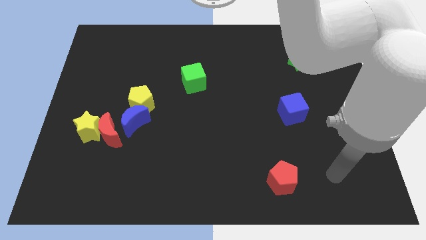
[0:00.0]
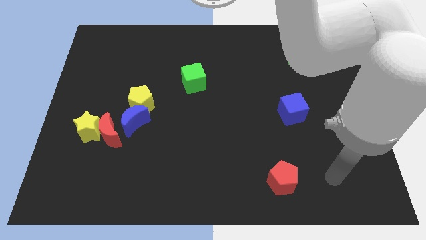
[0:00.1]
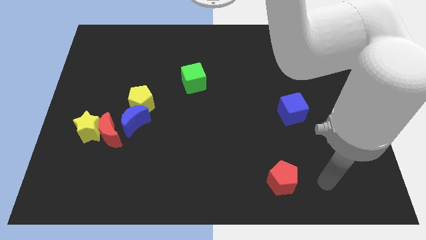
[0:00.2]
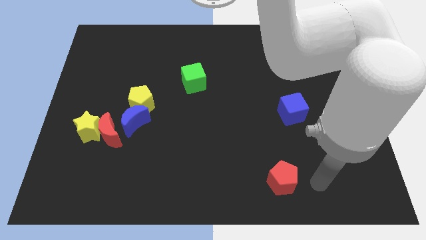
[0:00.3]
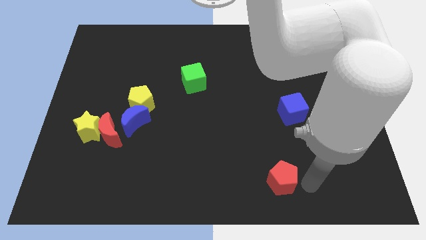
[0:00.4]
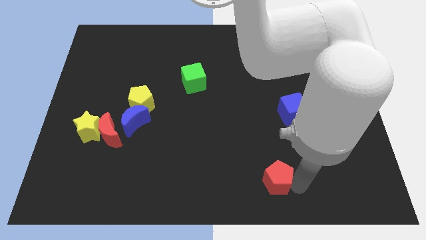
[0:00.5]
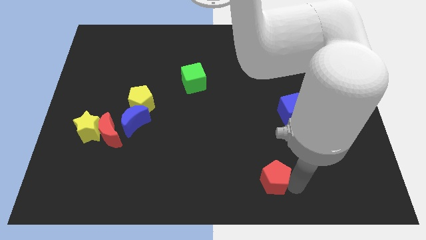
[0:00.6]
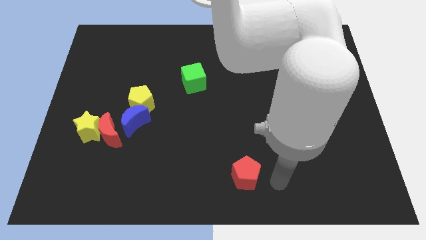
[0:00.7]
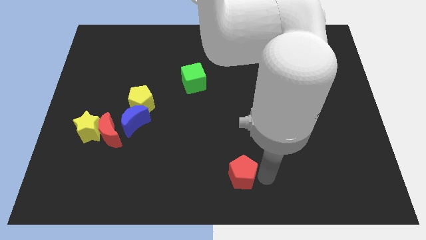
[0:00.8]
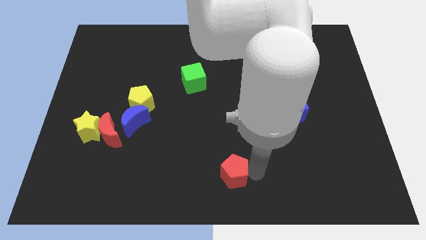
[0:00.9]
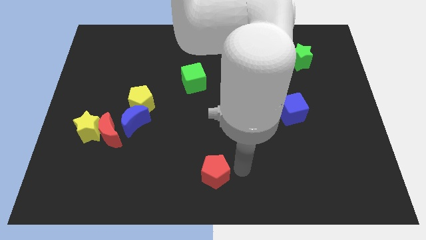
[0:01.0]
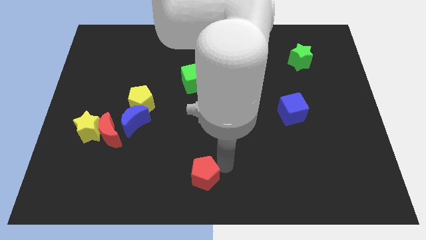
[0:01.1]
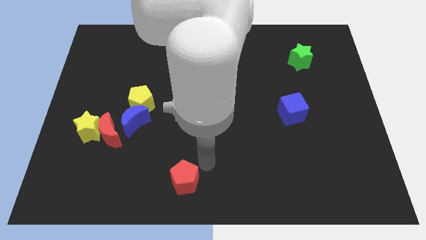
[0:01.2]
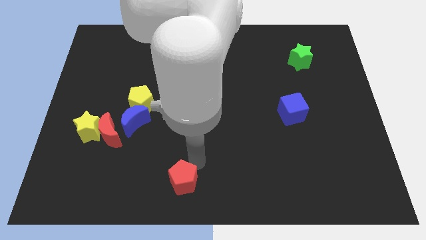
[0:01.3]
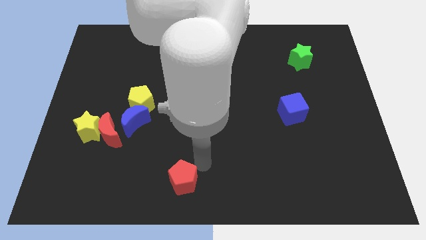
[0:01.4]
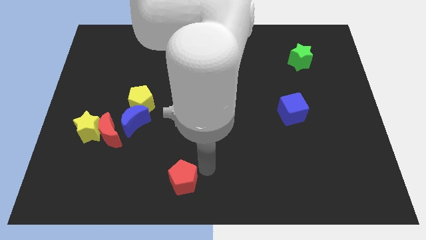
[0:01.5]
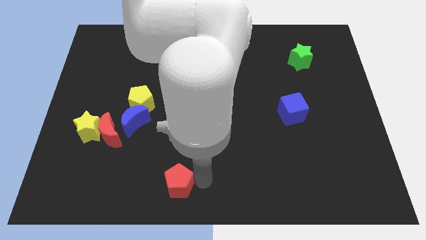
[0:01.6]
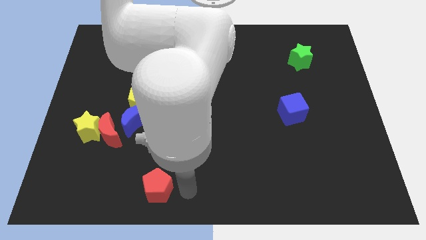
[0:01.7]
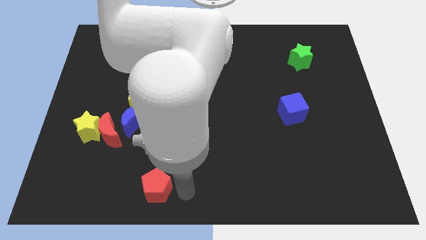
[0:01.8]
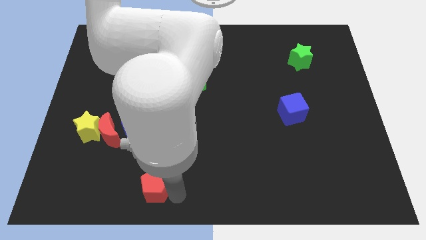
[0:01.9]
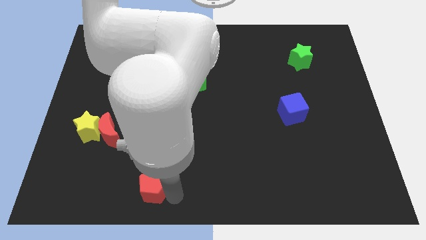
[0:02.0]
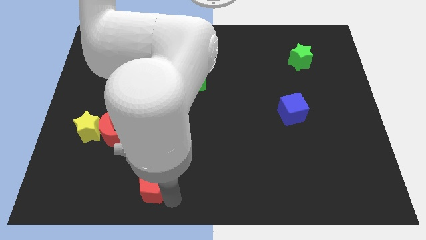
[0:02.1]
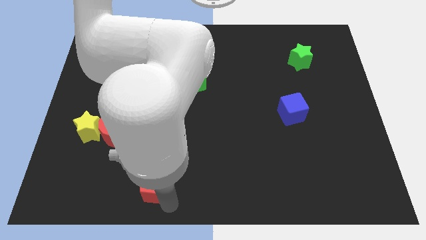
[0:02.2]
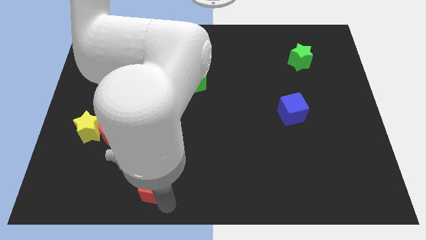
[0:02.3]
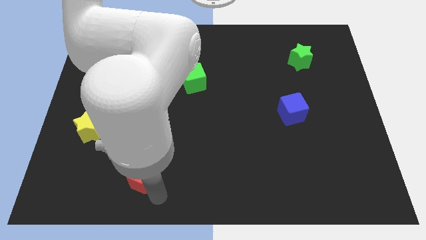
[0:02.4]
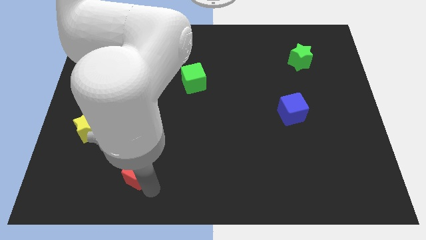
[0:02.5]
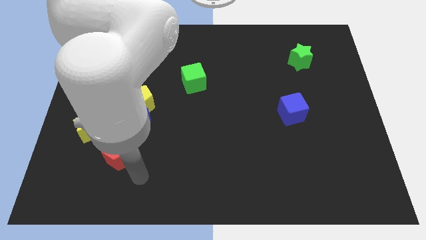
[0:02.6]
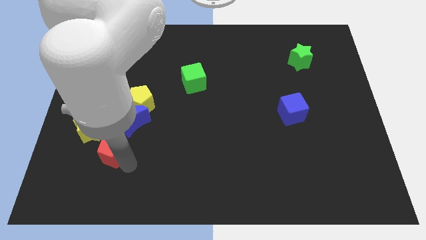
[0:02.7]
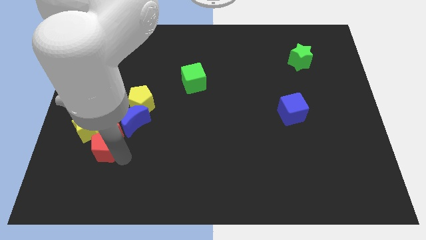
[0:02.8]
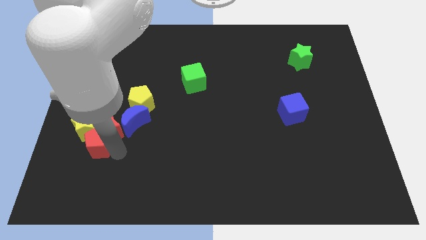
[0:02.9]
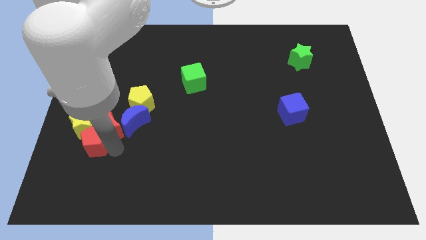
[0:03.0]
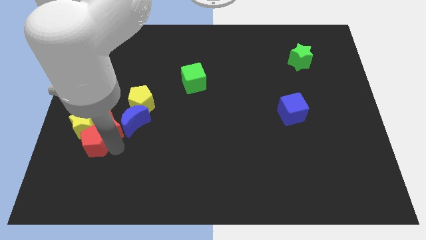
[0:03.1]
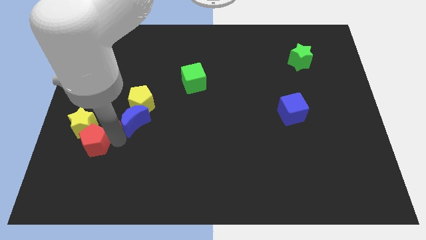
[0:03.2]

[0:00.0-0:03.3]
push the red pentagon into the yellow star

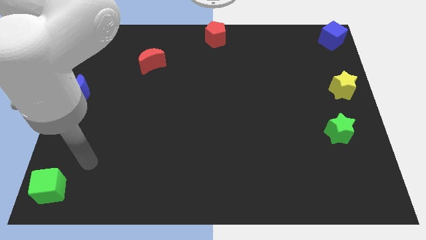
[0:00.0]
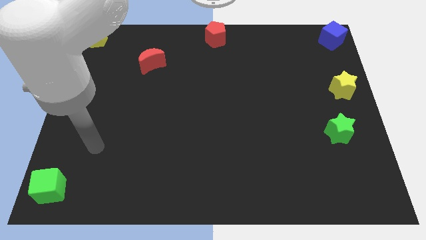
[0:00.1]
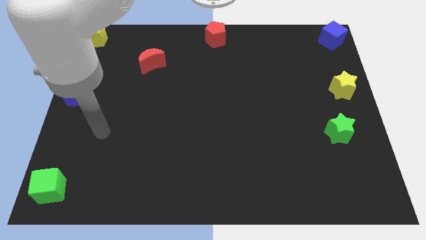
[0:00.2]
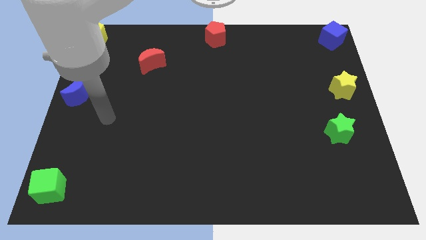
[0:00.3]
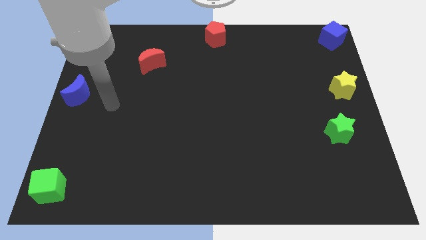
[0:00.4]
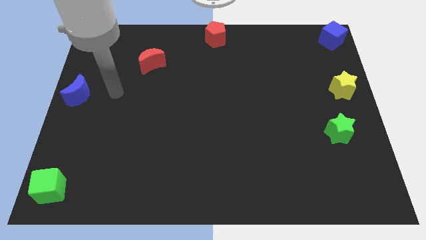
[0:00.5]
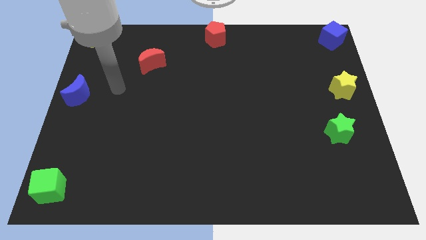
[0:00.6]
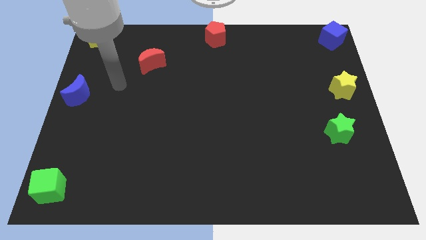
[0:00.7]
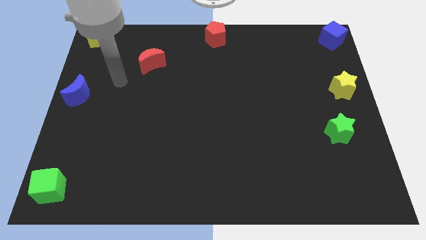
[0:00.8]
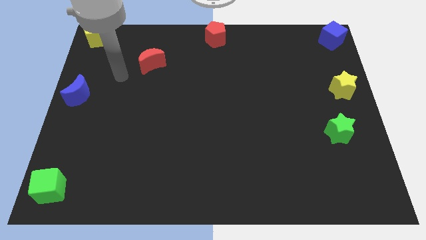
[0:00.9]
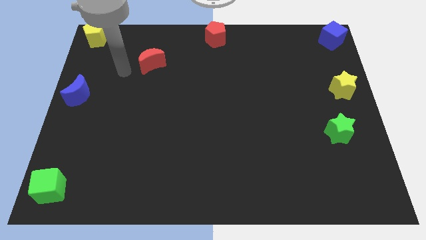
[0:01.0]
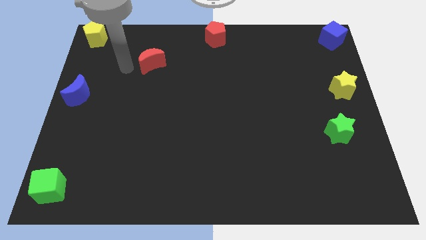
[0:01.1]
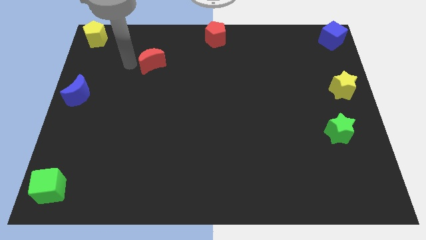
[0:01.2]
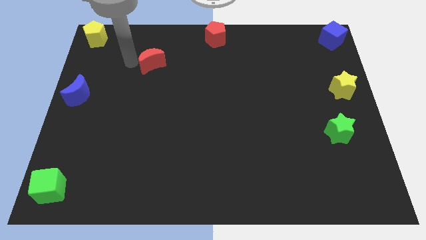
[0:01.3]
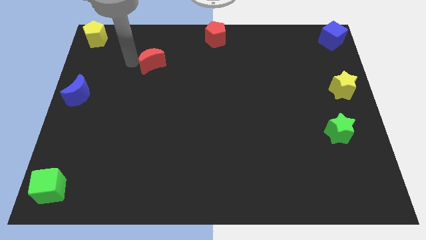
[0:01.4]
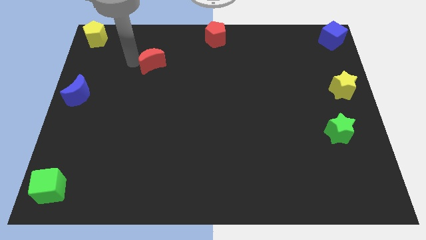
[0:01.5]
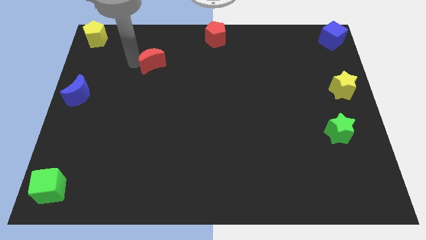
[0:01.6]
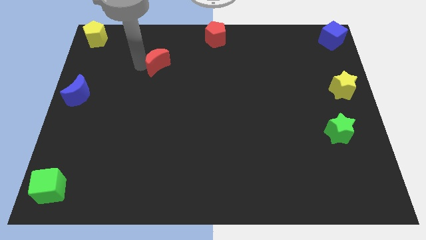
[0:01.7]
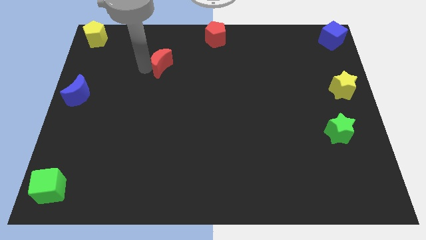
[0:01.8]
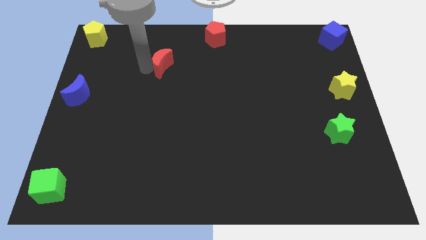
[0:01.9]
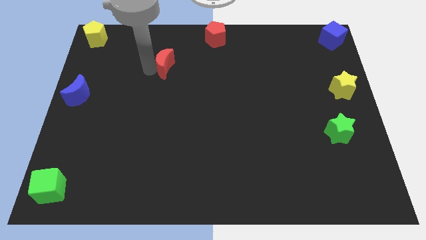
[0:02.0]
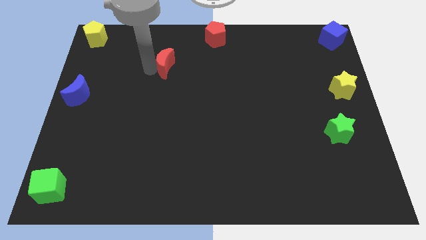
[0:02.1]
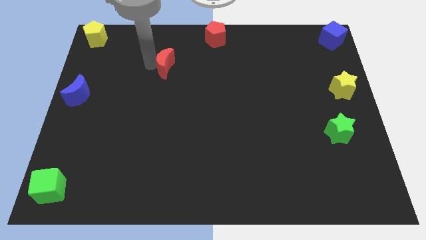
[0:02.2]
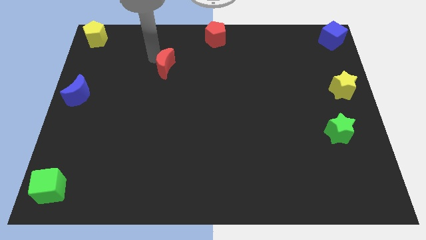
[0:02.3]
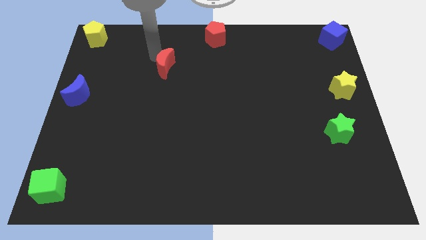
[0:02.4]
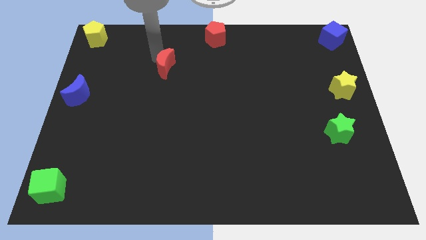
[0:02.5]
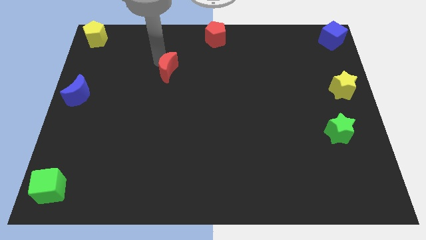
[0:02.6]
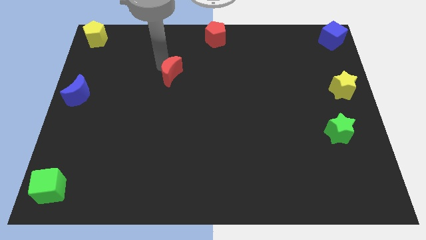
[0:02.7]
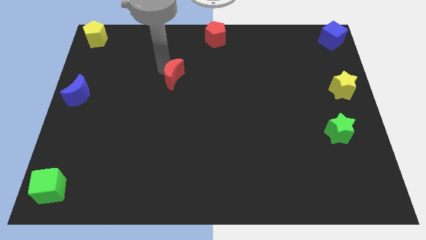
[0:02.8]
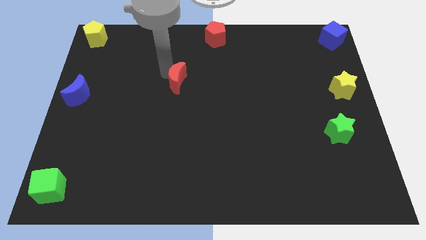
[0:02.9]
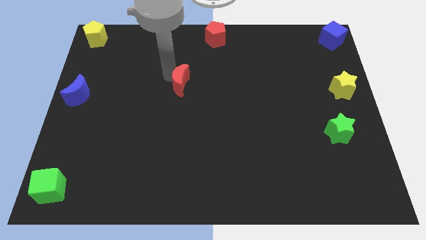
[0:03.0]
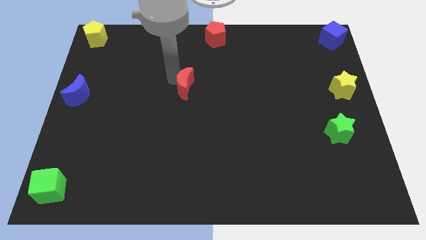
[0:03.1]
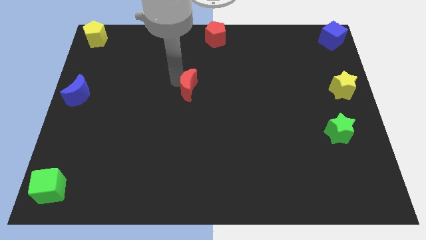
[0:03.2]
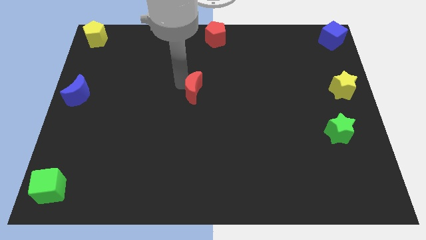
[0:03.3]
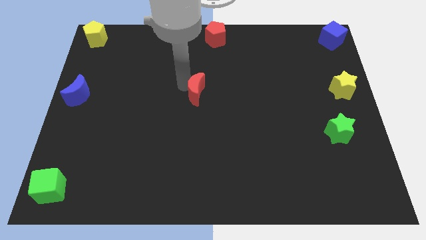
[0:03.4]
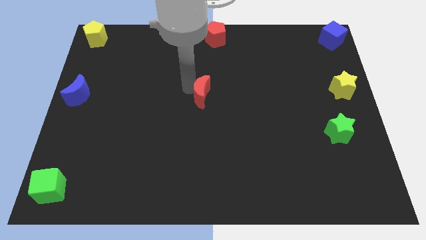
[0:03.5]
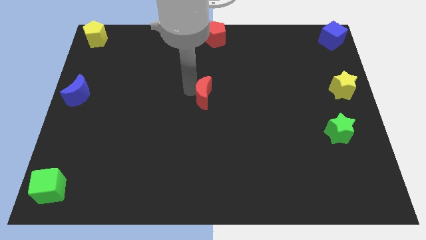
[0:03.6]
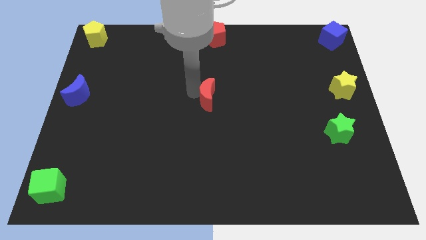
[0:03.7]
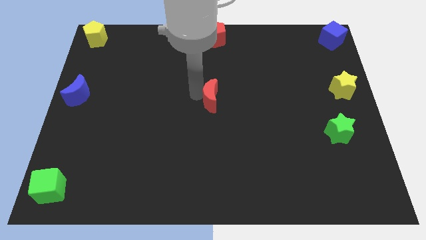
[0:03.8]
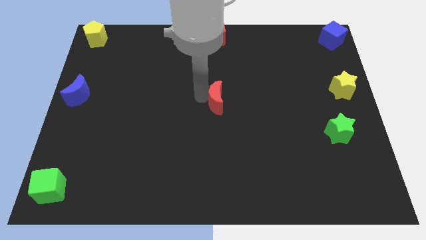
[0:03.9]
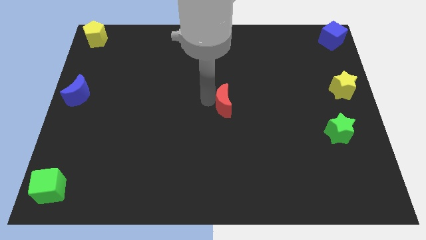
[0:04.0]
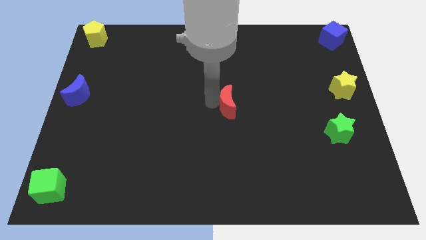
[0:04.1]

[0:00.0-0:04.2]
push the red moon to the center of the board

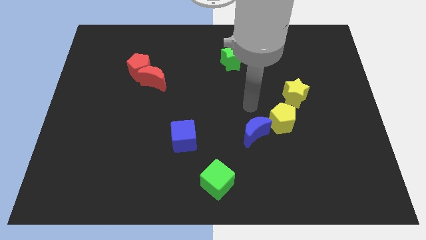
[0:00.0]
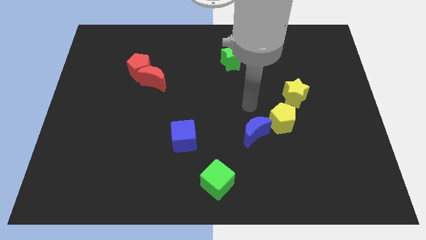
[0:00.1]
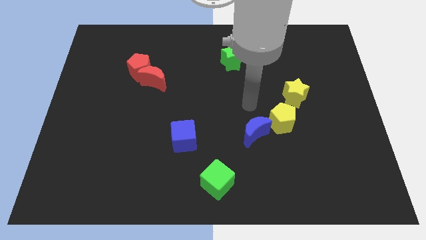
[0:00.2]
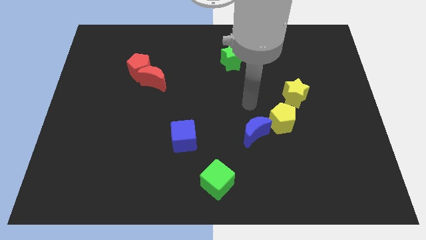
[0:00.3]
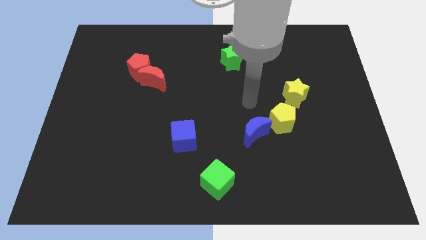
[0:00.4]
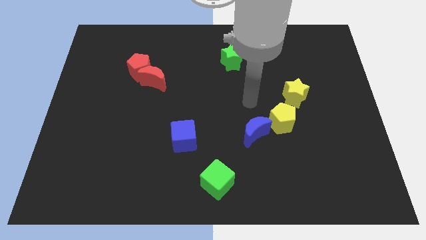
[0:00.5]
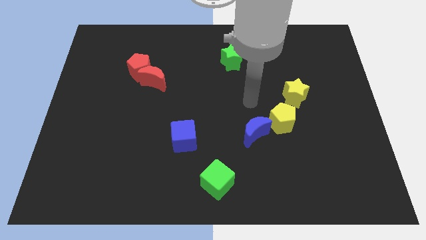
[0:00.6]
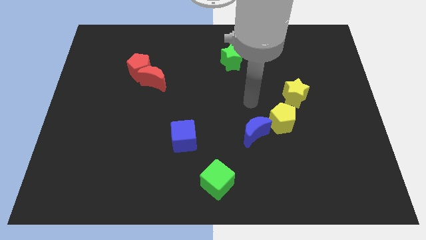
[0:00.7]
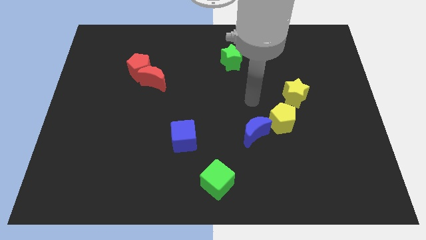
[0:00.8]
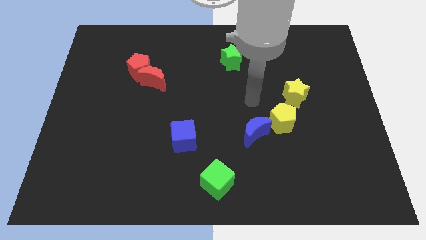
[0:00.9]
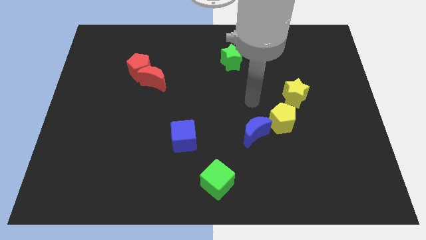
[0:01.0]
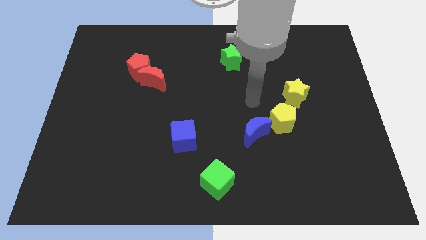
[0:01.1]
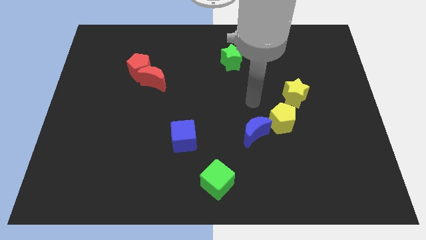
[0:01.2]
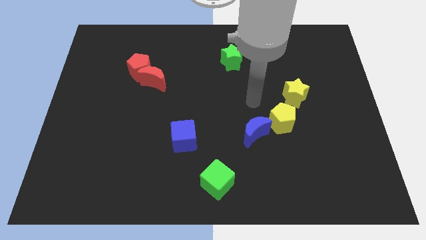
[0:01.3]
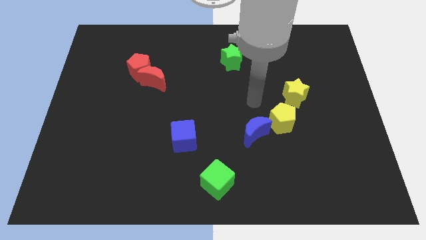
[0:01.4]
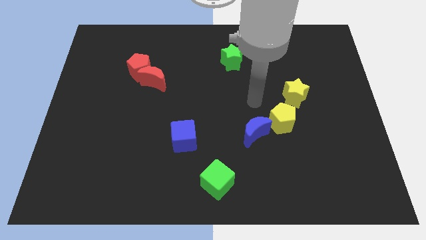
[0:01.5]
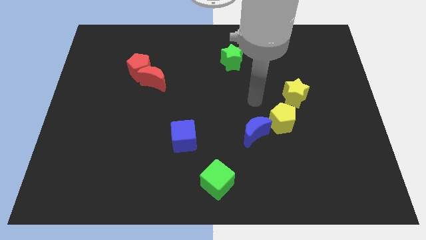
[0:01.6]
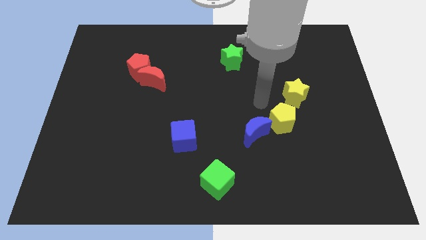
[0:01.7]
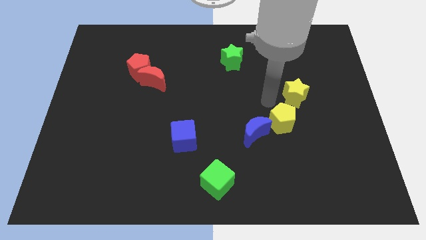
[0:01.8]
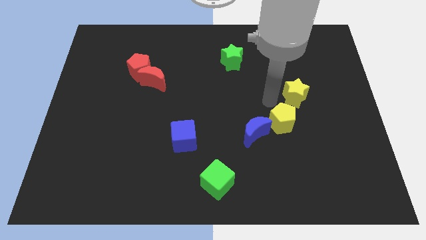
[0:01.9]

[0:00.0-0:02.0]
move your arm towards the yellow pentagon
